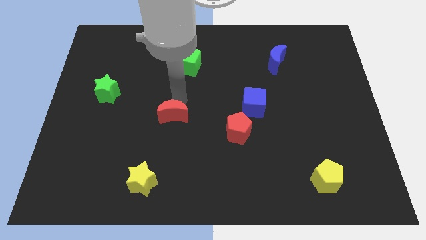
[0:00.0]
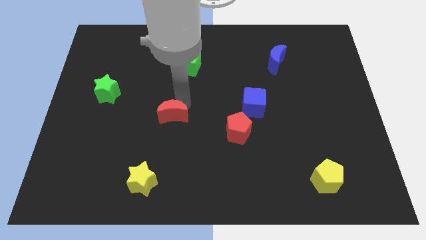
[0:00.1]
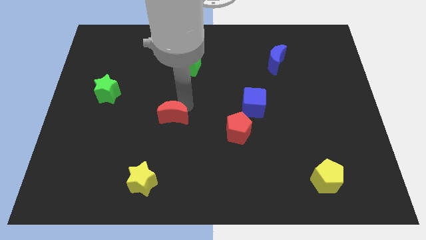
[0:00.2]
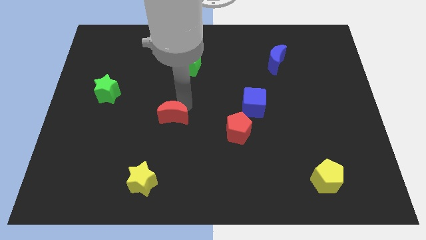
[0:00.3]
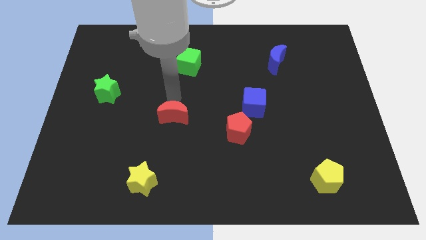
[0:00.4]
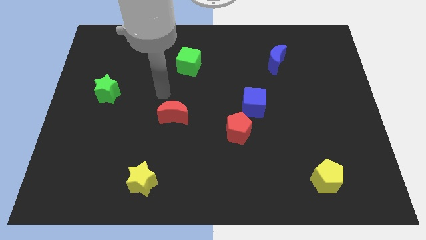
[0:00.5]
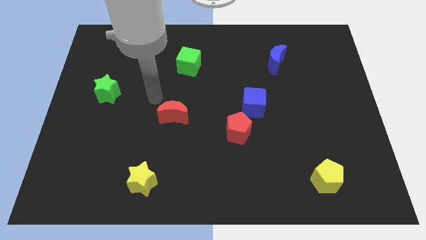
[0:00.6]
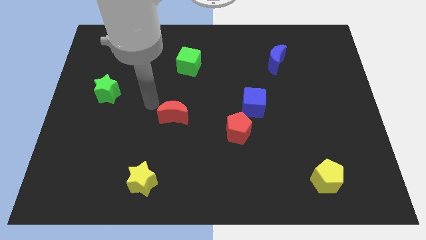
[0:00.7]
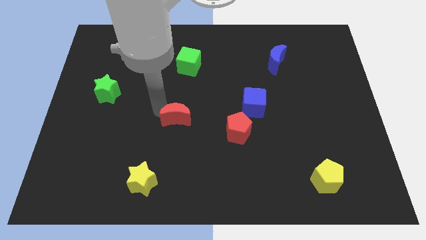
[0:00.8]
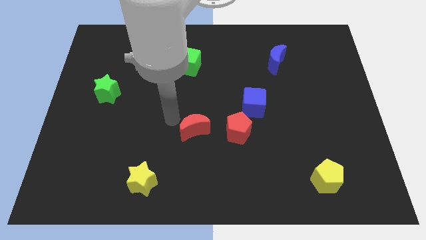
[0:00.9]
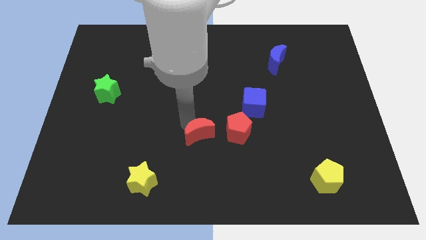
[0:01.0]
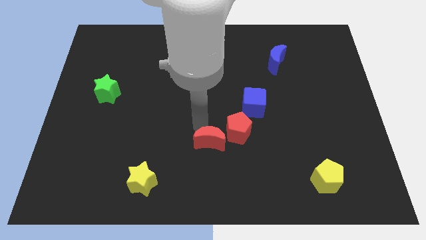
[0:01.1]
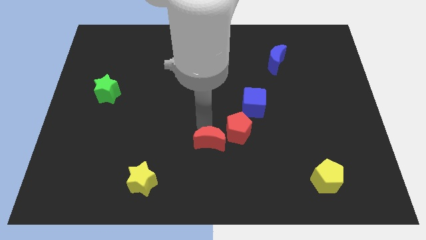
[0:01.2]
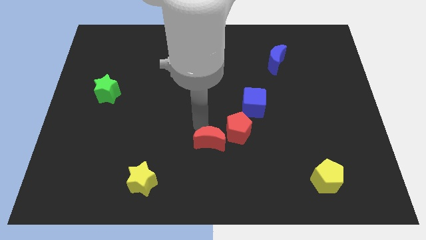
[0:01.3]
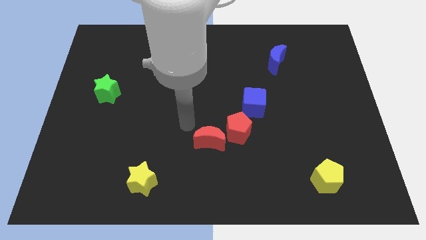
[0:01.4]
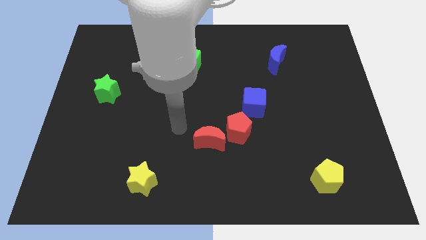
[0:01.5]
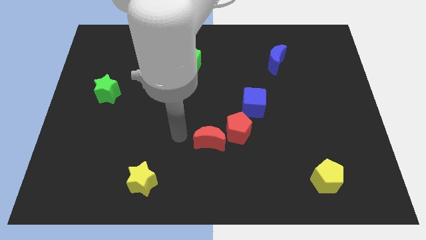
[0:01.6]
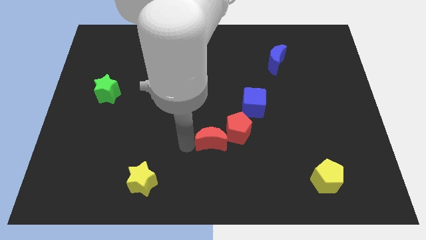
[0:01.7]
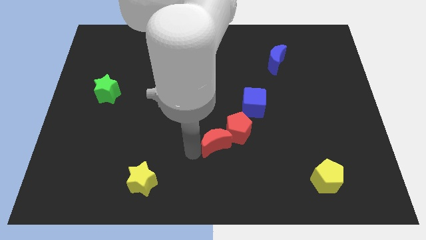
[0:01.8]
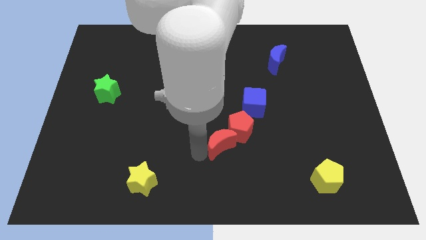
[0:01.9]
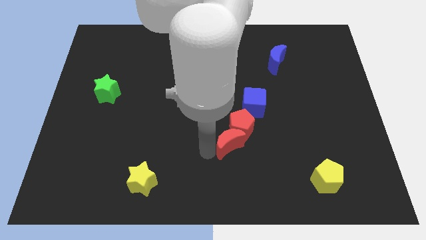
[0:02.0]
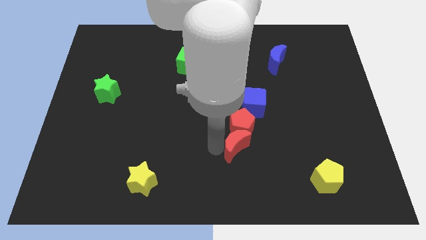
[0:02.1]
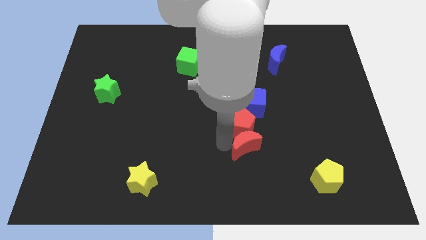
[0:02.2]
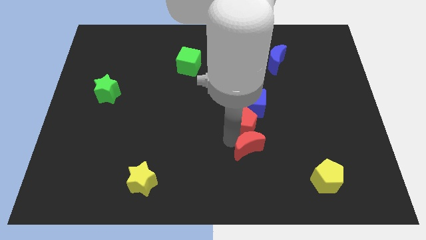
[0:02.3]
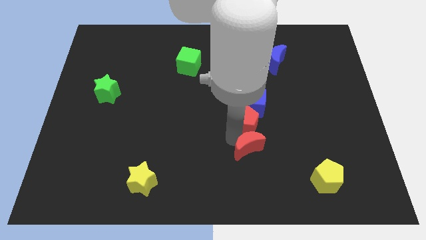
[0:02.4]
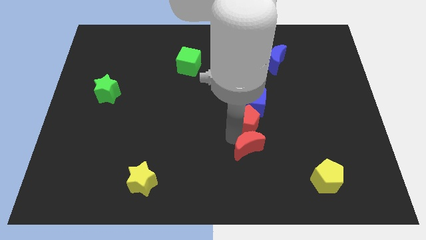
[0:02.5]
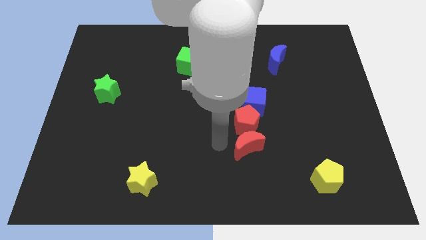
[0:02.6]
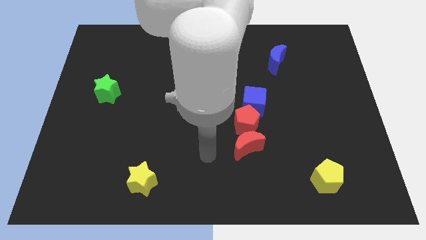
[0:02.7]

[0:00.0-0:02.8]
push the red moon below the red pentagon

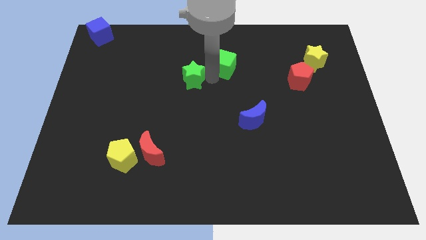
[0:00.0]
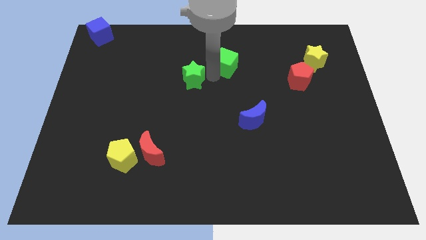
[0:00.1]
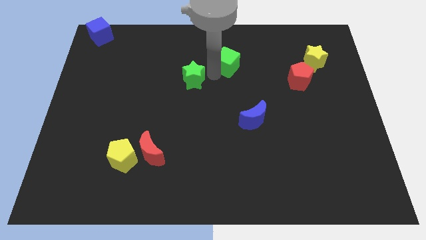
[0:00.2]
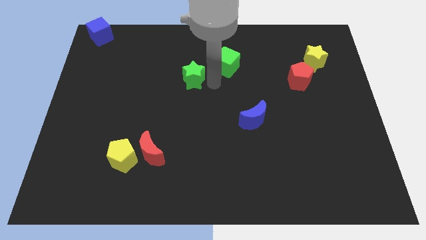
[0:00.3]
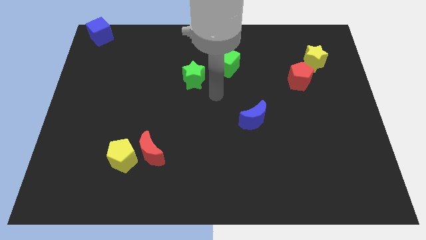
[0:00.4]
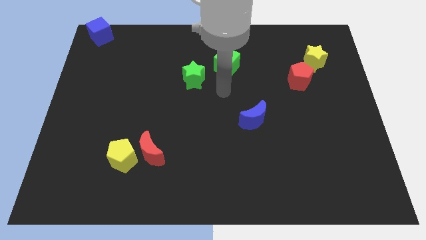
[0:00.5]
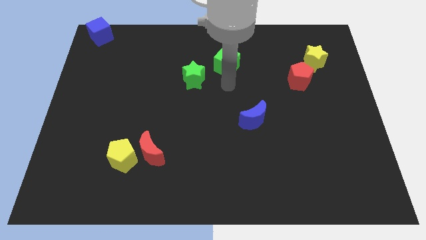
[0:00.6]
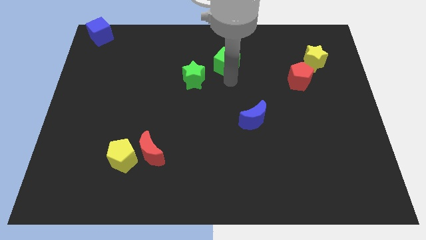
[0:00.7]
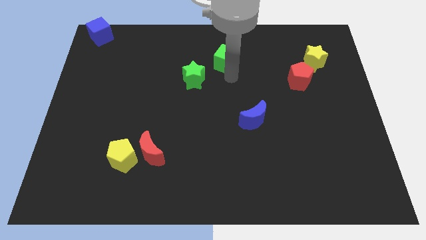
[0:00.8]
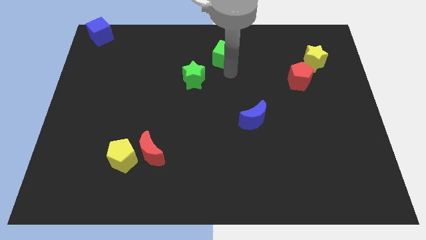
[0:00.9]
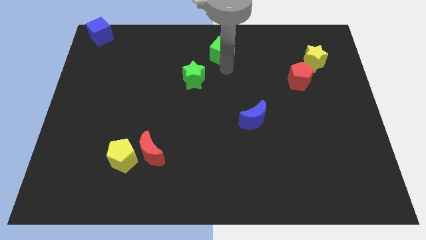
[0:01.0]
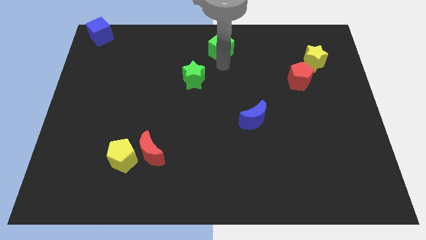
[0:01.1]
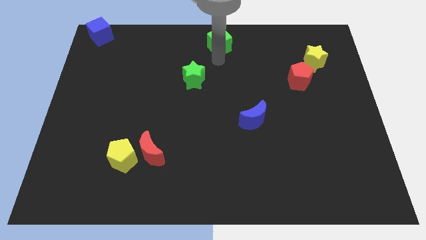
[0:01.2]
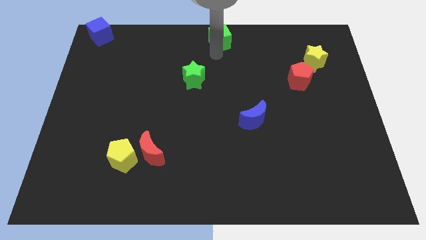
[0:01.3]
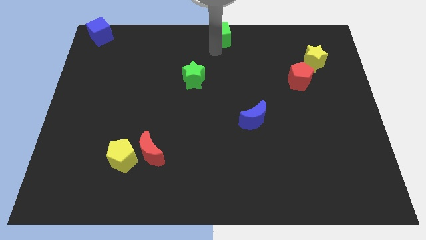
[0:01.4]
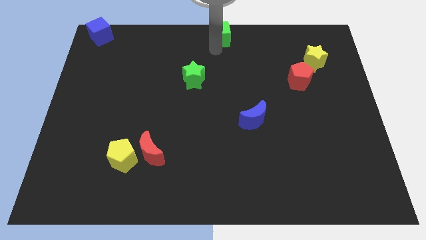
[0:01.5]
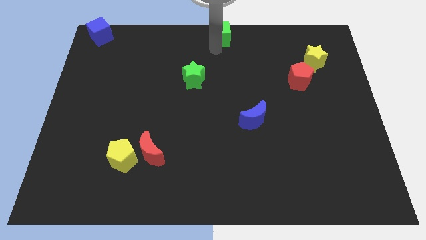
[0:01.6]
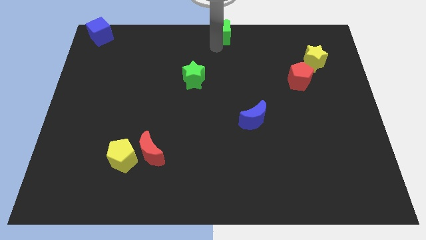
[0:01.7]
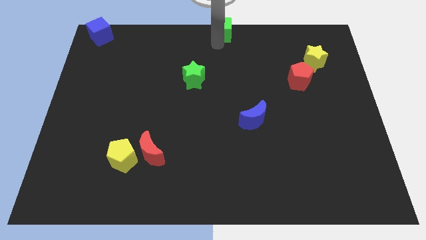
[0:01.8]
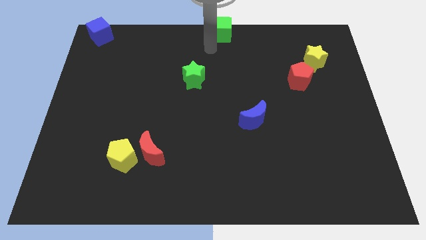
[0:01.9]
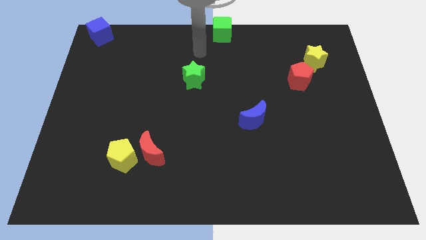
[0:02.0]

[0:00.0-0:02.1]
push green cube to the top center

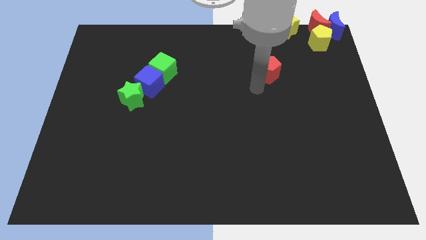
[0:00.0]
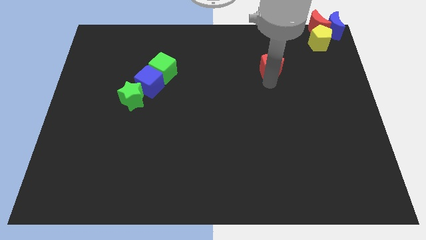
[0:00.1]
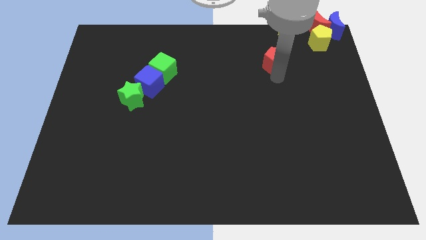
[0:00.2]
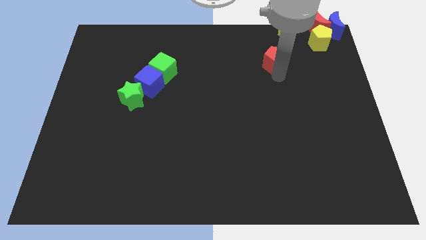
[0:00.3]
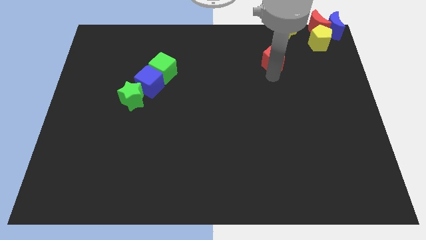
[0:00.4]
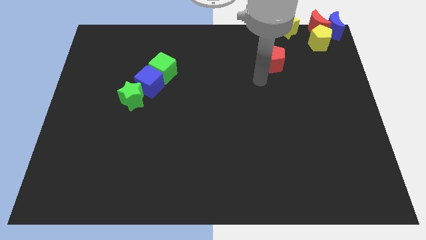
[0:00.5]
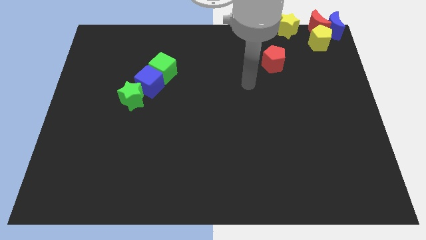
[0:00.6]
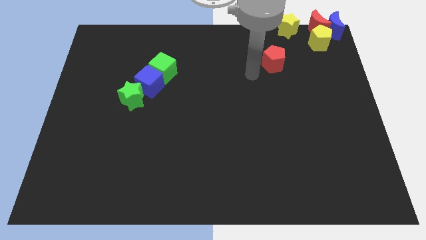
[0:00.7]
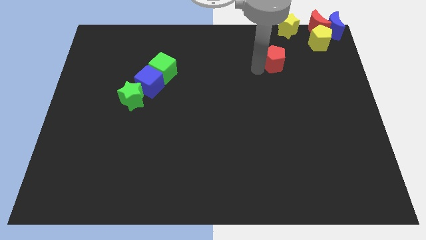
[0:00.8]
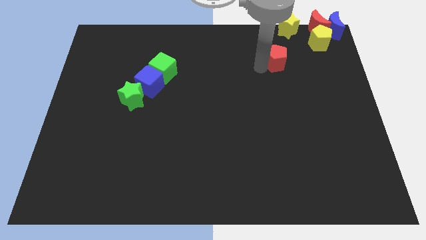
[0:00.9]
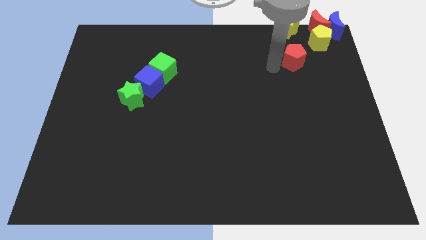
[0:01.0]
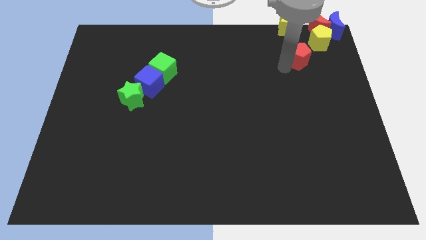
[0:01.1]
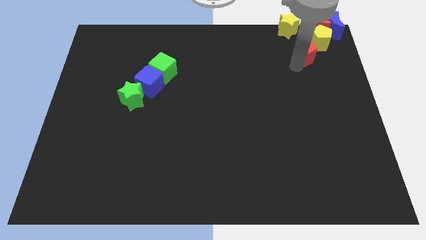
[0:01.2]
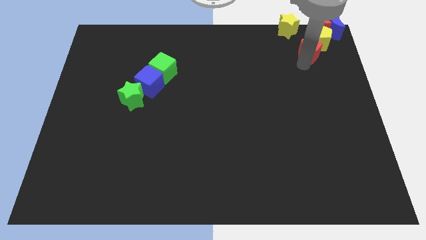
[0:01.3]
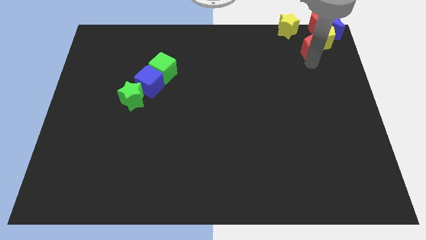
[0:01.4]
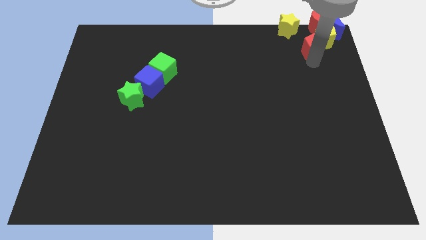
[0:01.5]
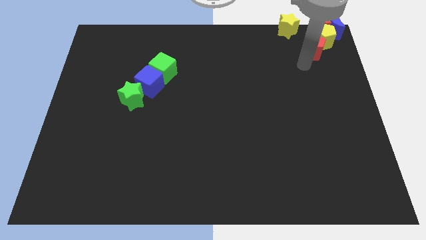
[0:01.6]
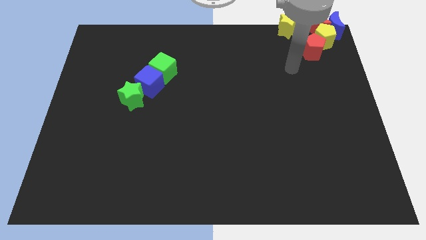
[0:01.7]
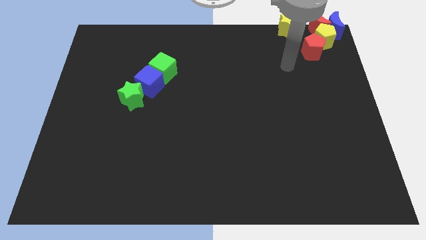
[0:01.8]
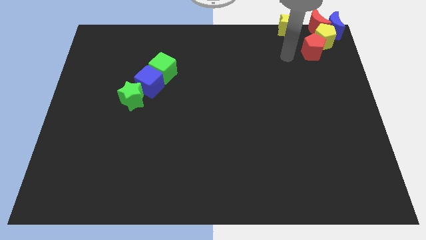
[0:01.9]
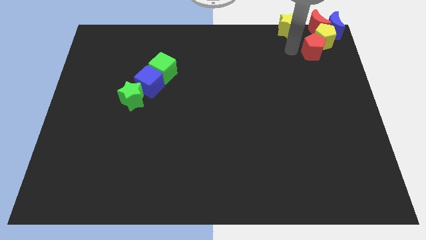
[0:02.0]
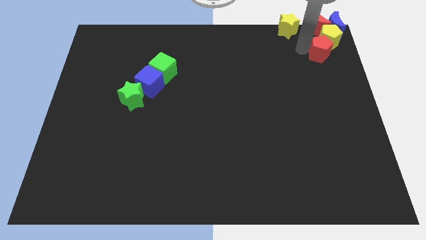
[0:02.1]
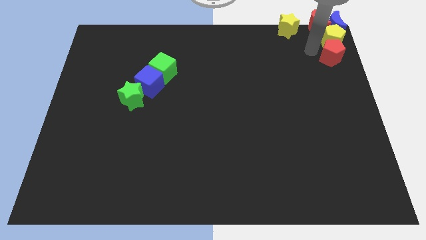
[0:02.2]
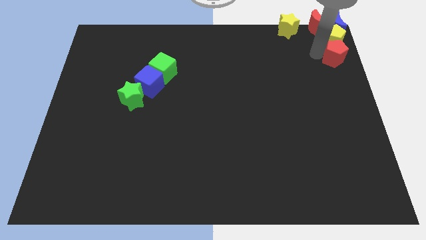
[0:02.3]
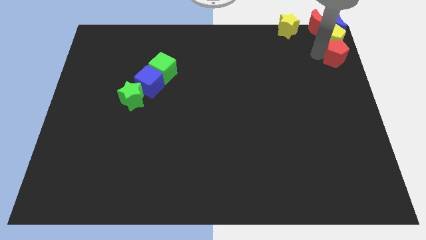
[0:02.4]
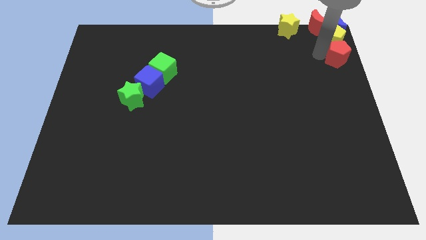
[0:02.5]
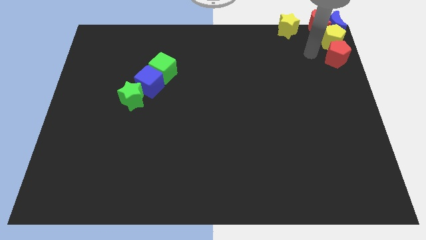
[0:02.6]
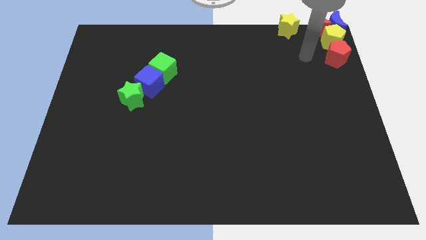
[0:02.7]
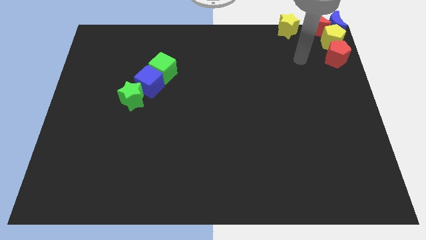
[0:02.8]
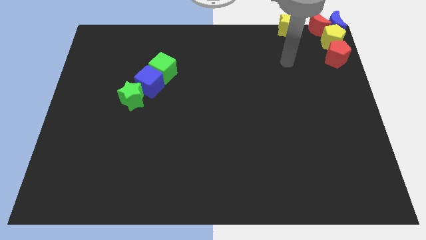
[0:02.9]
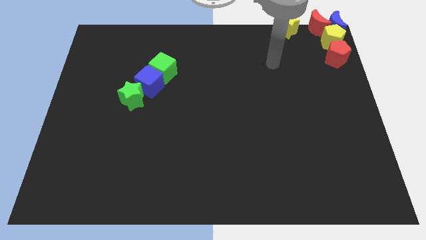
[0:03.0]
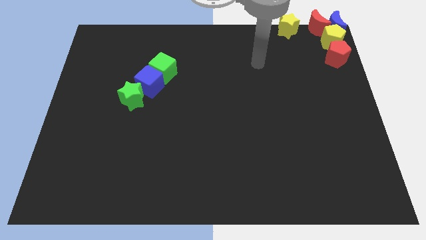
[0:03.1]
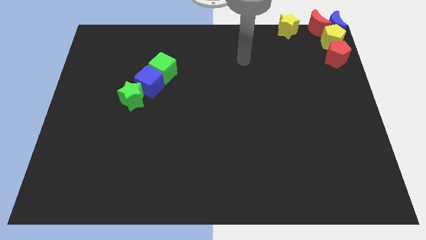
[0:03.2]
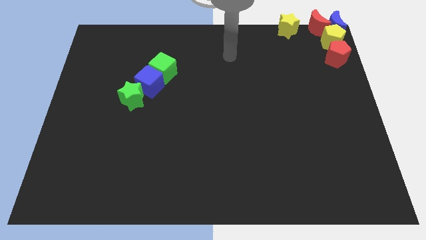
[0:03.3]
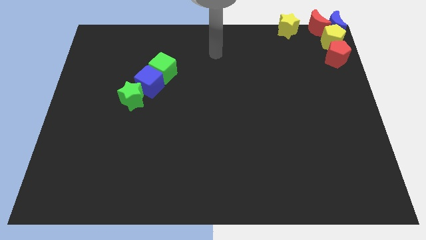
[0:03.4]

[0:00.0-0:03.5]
push the red pentagon into the bottom side of the yellow pentagon

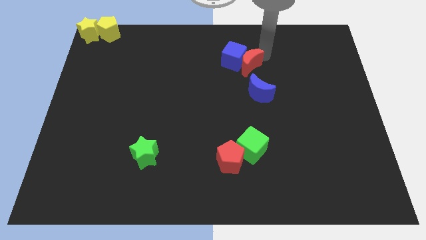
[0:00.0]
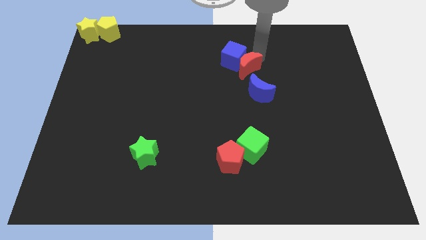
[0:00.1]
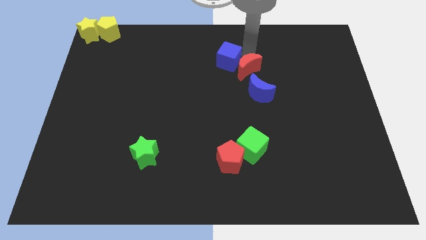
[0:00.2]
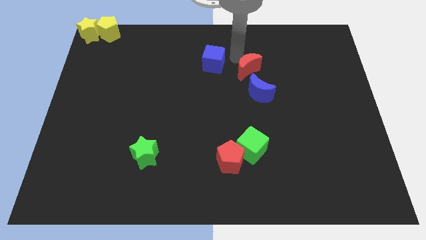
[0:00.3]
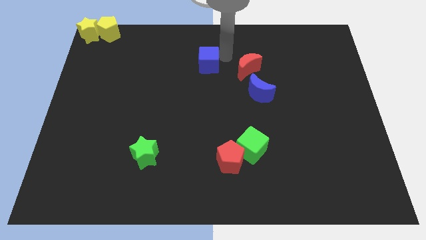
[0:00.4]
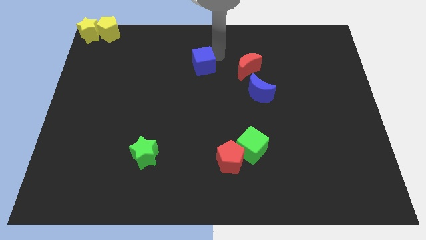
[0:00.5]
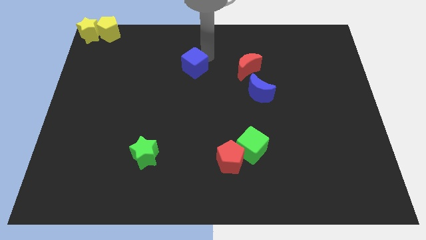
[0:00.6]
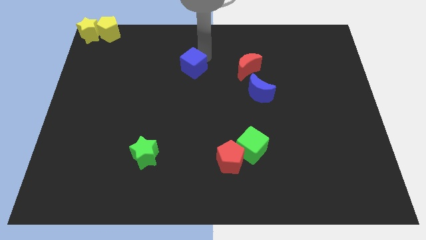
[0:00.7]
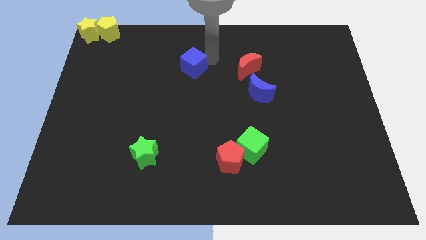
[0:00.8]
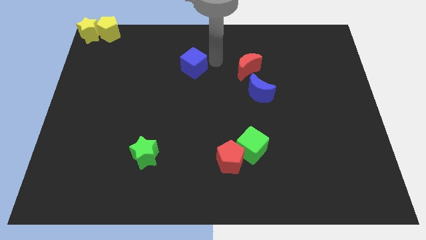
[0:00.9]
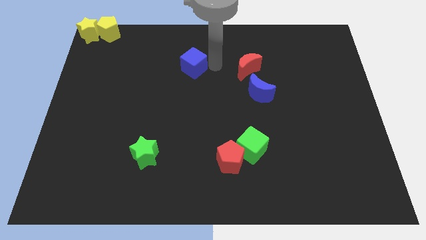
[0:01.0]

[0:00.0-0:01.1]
move blue cube away from the red moon
